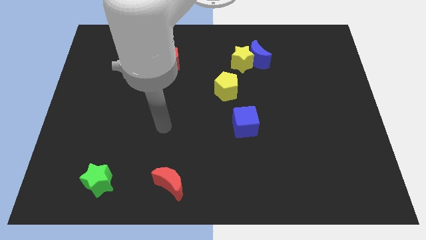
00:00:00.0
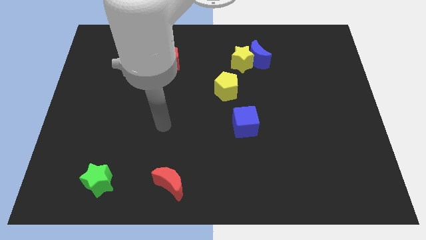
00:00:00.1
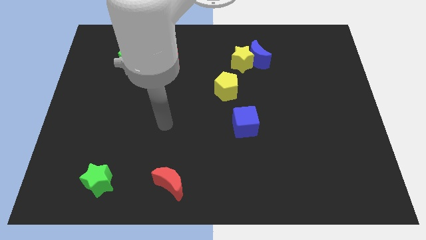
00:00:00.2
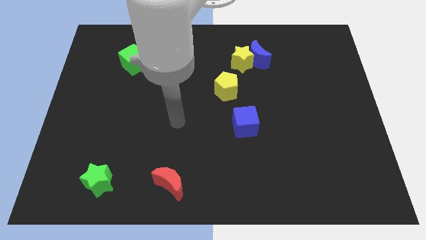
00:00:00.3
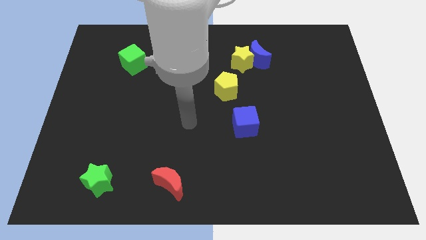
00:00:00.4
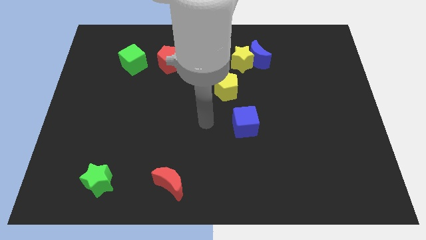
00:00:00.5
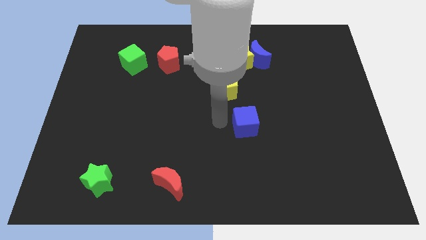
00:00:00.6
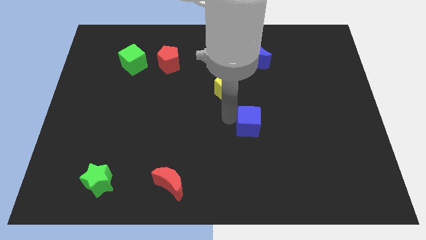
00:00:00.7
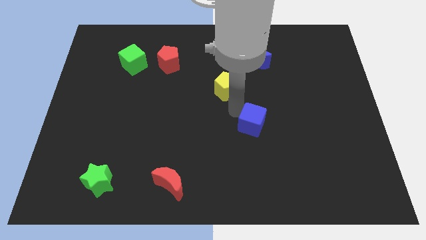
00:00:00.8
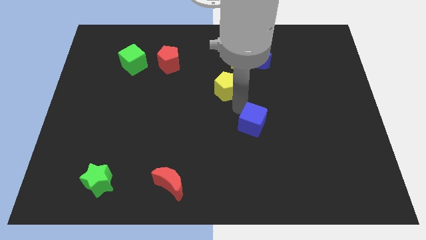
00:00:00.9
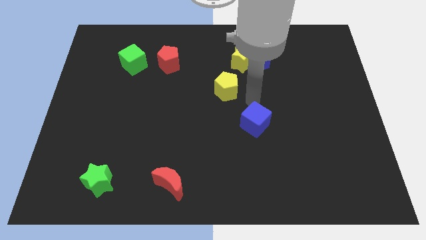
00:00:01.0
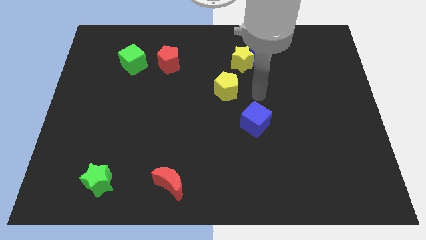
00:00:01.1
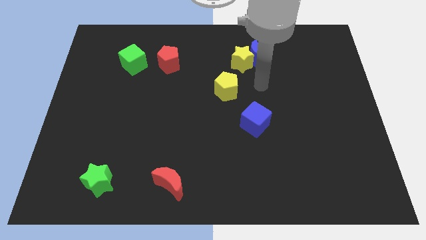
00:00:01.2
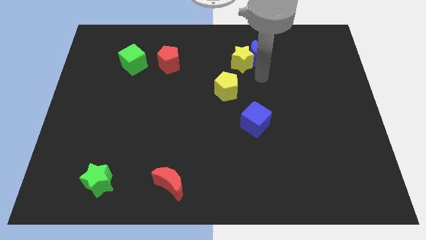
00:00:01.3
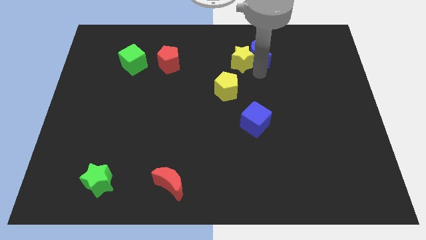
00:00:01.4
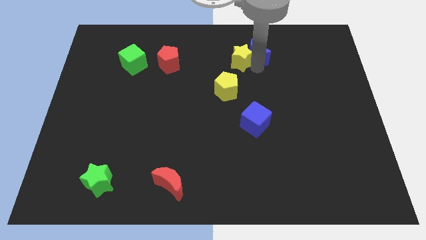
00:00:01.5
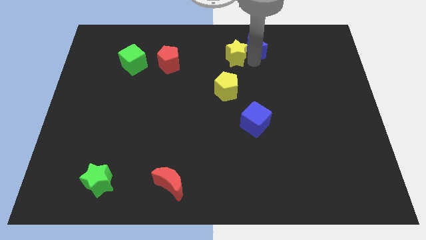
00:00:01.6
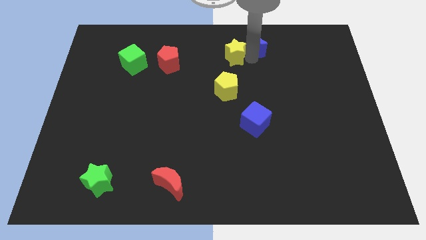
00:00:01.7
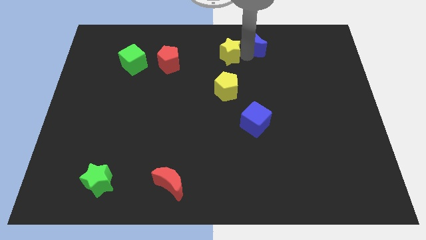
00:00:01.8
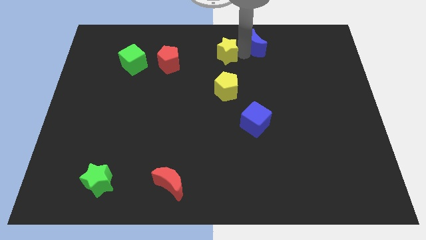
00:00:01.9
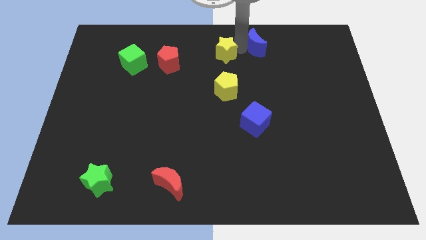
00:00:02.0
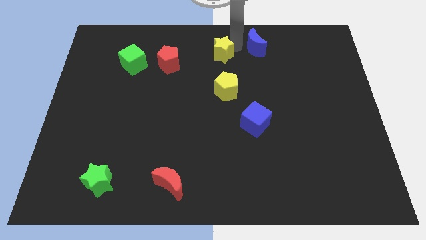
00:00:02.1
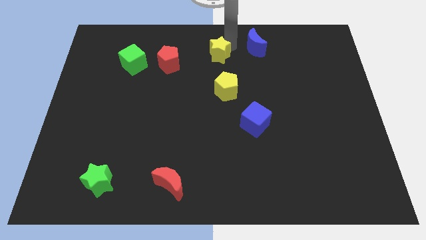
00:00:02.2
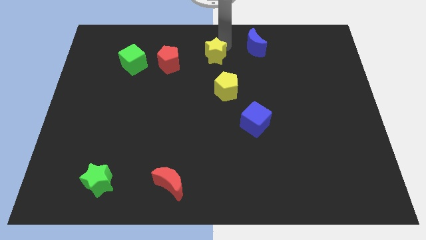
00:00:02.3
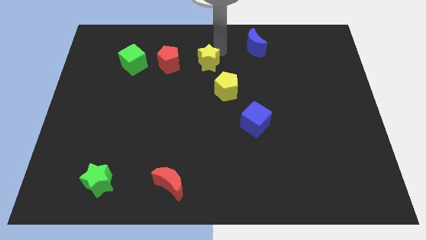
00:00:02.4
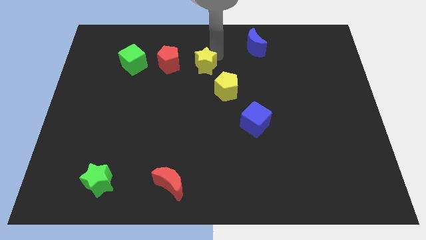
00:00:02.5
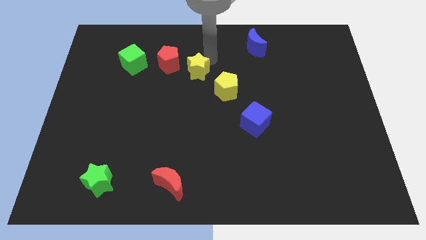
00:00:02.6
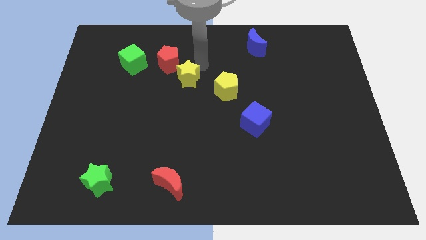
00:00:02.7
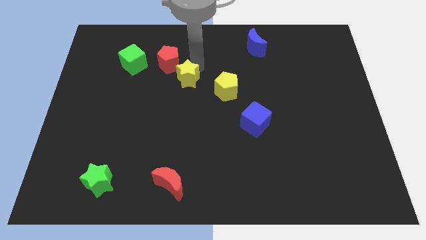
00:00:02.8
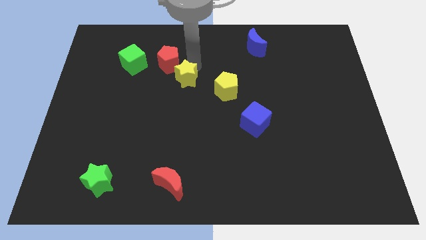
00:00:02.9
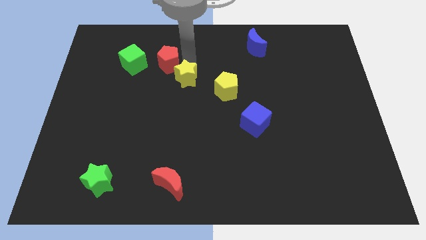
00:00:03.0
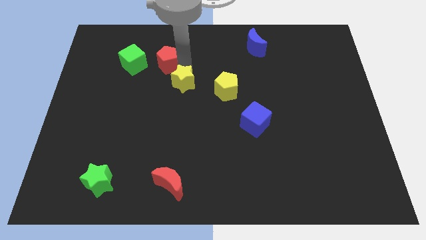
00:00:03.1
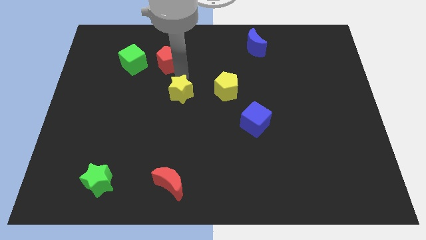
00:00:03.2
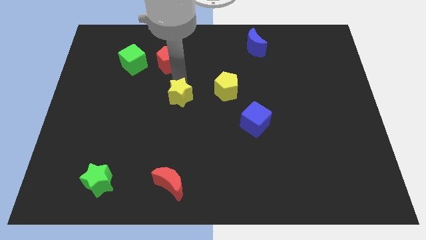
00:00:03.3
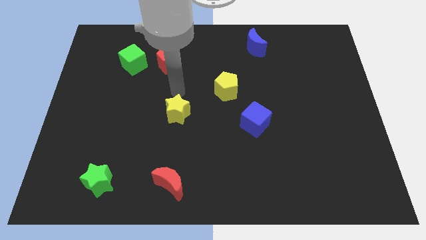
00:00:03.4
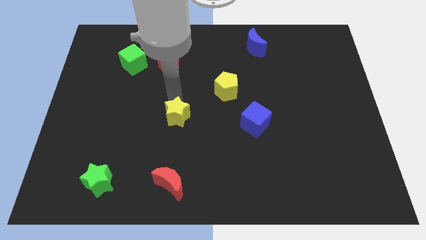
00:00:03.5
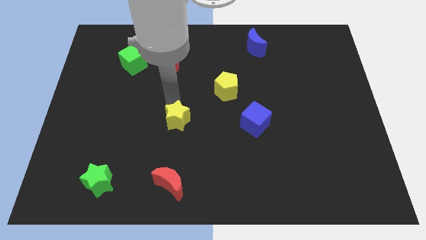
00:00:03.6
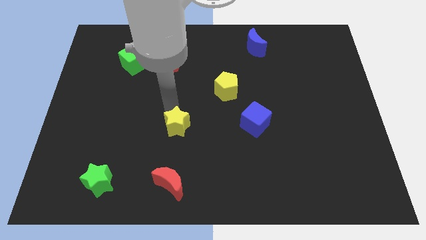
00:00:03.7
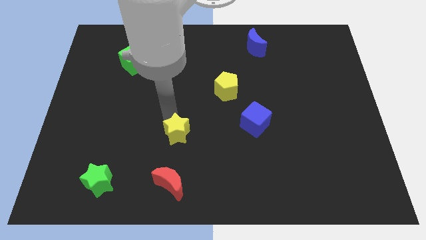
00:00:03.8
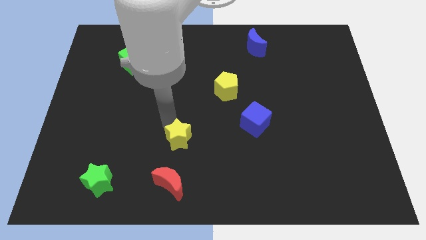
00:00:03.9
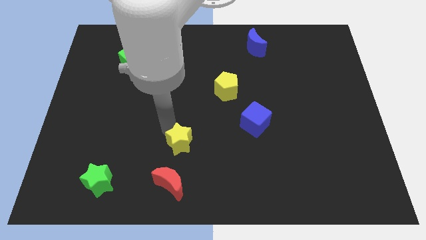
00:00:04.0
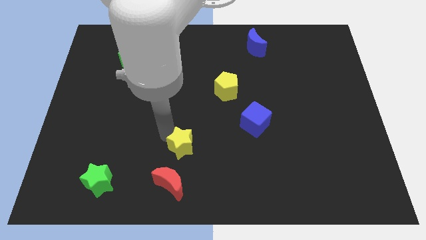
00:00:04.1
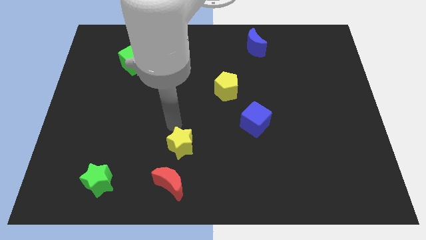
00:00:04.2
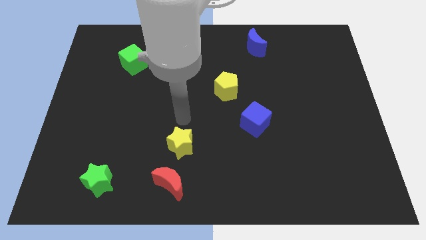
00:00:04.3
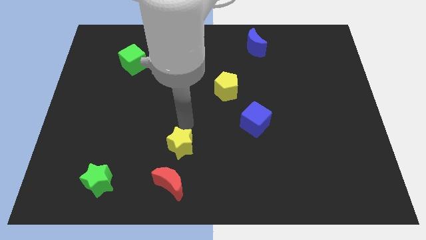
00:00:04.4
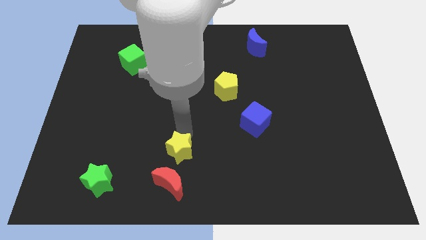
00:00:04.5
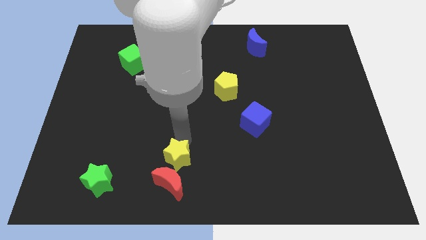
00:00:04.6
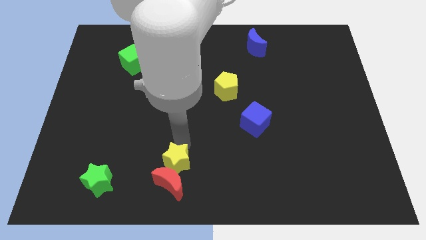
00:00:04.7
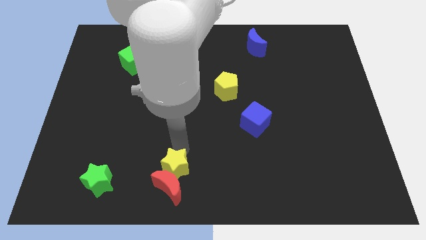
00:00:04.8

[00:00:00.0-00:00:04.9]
move the yellow star close to the red moon

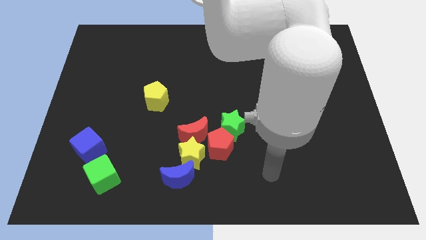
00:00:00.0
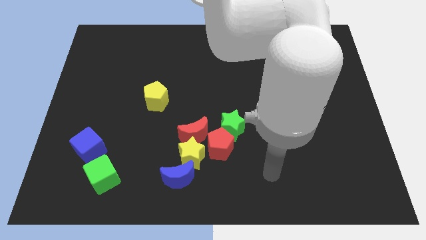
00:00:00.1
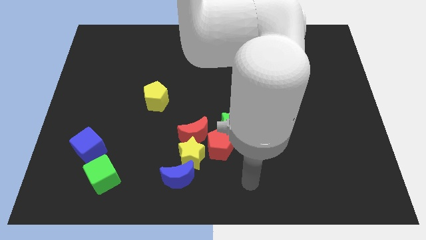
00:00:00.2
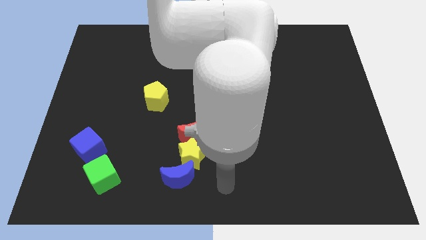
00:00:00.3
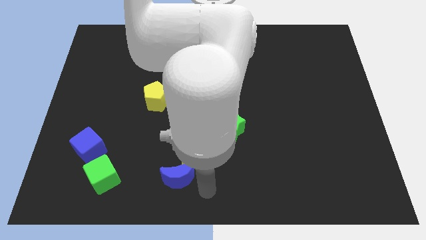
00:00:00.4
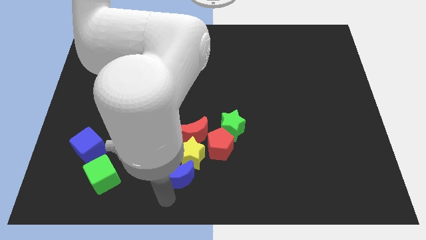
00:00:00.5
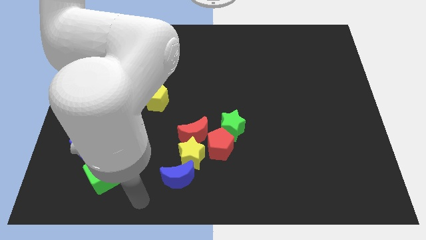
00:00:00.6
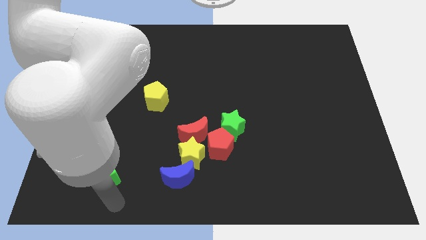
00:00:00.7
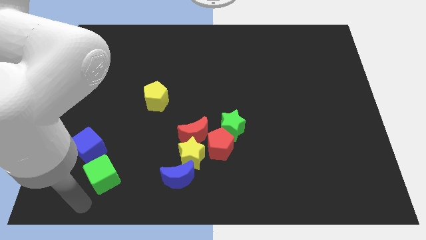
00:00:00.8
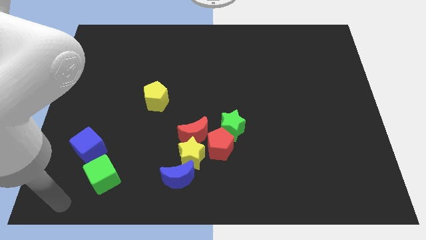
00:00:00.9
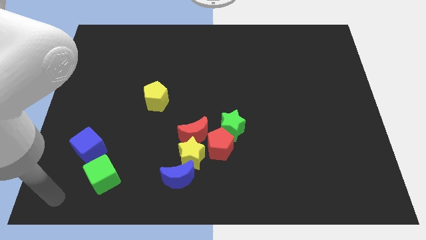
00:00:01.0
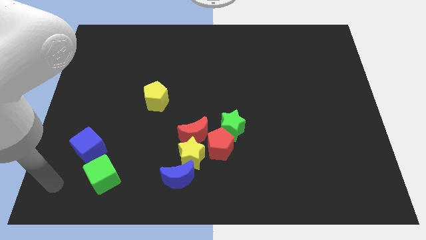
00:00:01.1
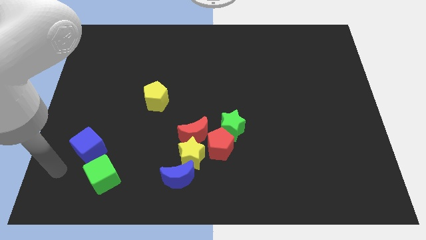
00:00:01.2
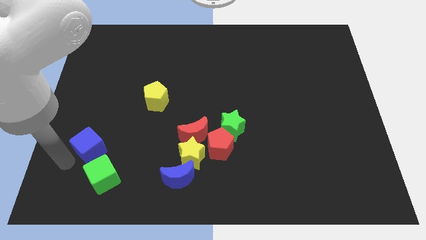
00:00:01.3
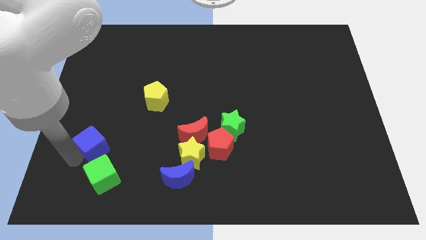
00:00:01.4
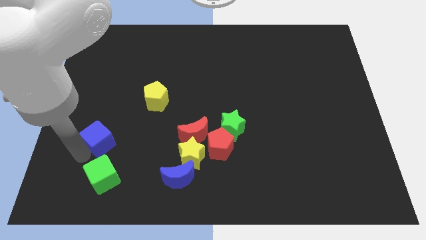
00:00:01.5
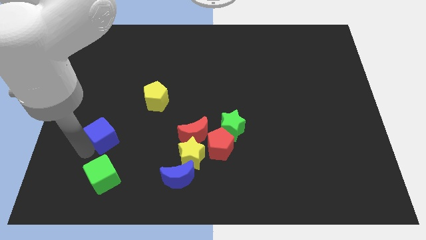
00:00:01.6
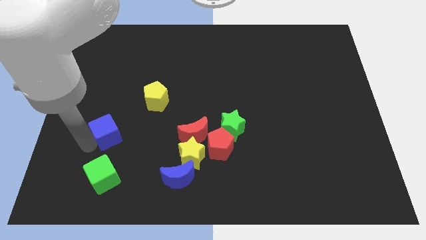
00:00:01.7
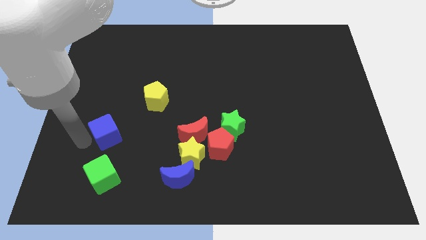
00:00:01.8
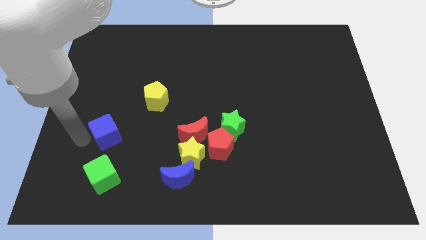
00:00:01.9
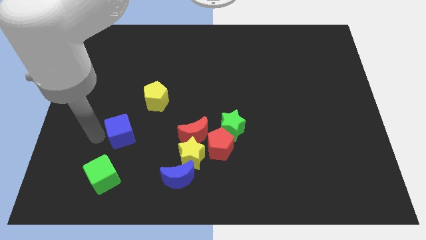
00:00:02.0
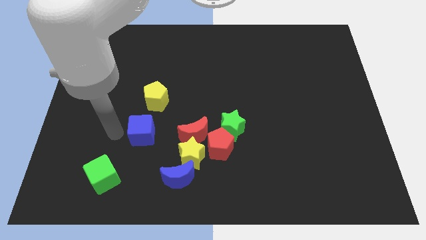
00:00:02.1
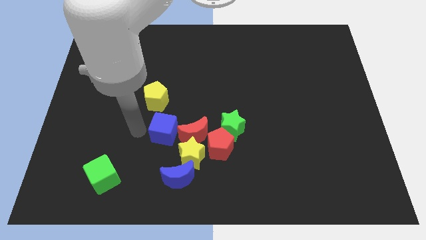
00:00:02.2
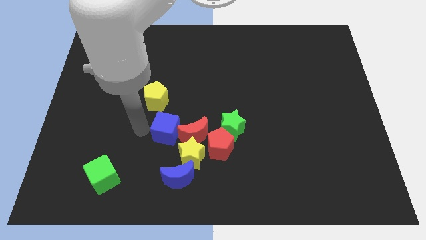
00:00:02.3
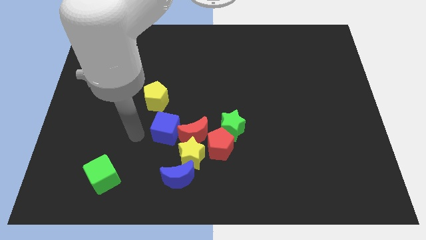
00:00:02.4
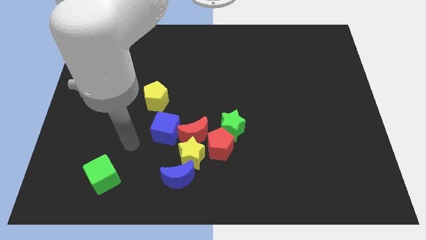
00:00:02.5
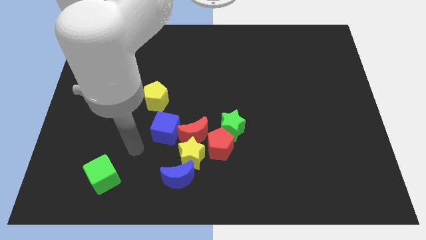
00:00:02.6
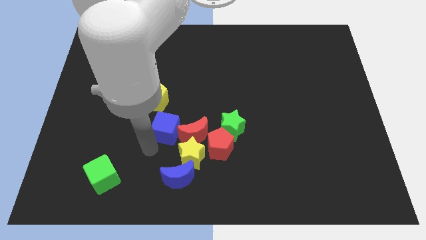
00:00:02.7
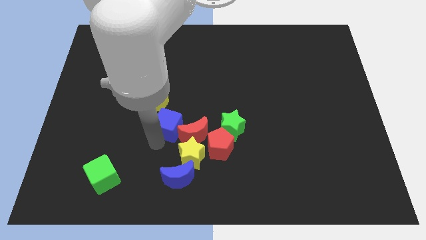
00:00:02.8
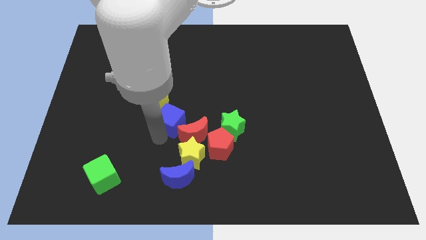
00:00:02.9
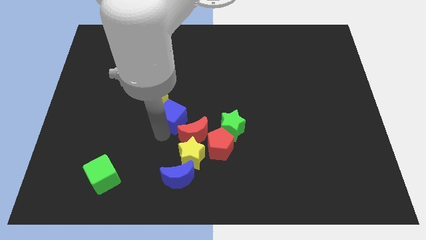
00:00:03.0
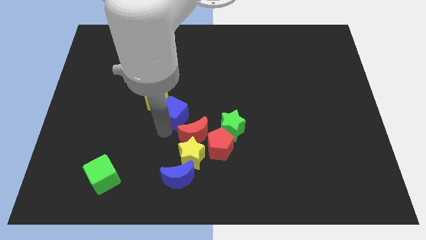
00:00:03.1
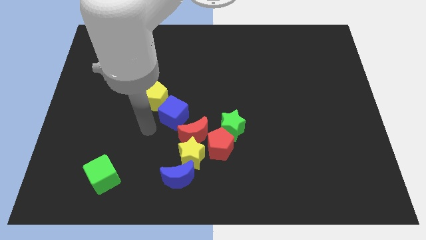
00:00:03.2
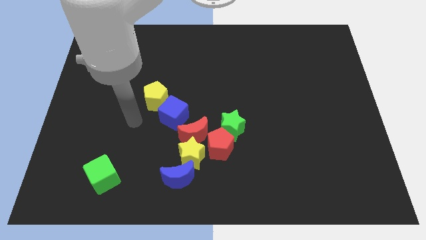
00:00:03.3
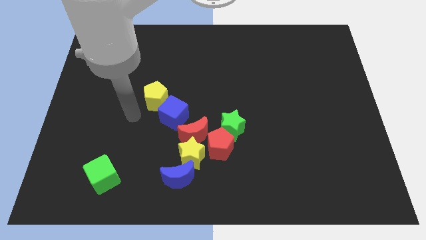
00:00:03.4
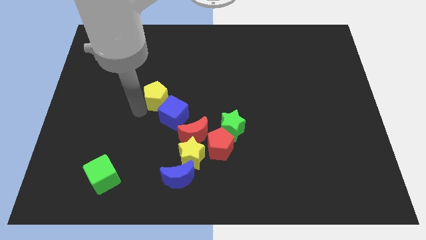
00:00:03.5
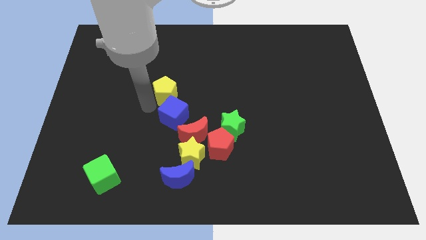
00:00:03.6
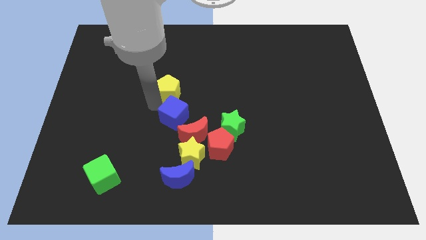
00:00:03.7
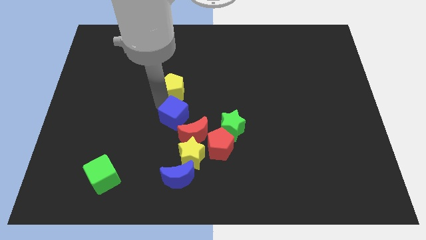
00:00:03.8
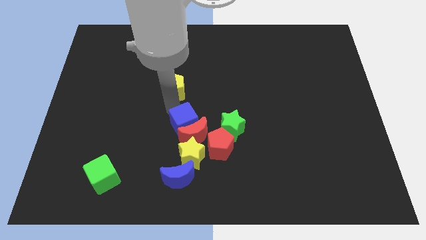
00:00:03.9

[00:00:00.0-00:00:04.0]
move the blue cube towards the red moon
